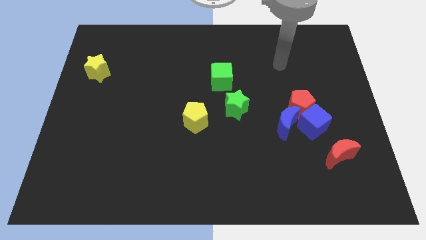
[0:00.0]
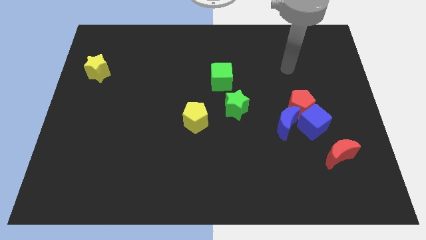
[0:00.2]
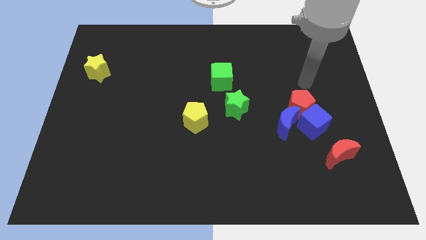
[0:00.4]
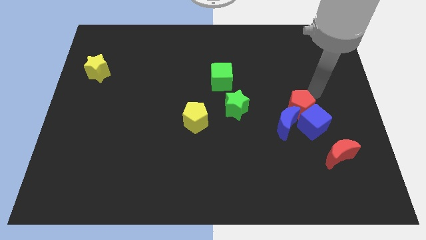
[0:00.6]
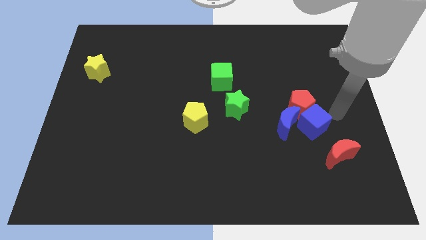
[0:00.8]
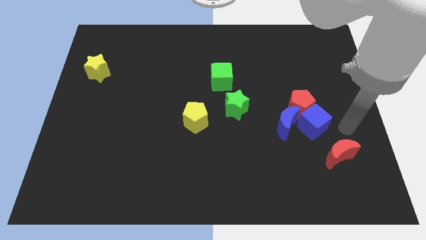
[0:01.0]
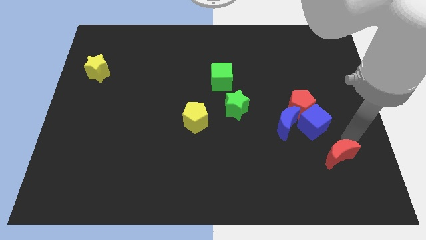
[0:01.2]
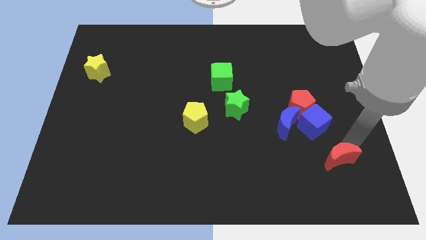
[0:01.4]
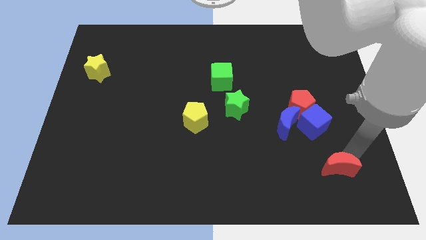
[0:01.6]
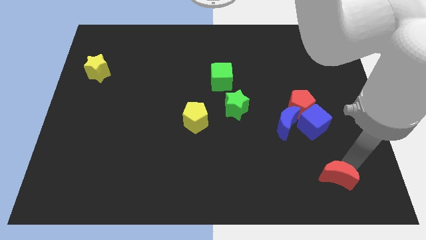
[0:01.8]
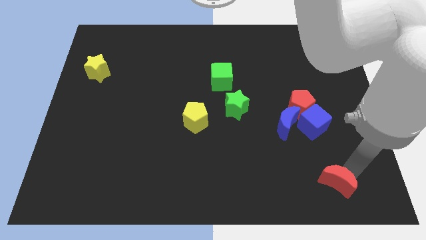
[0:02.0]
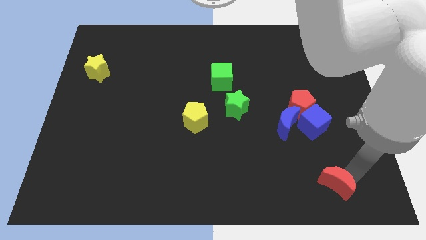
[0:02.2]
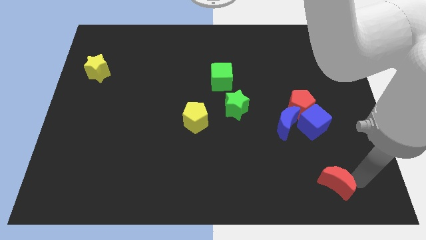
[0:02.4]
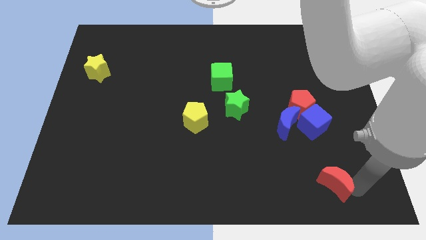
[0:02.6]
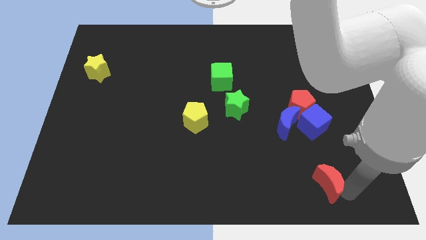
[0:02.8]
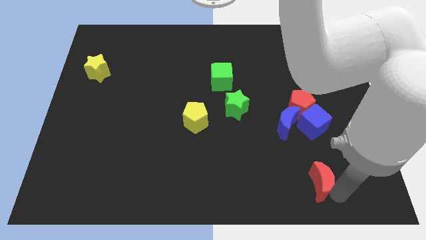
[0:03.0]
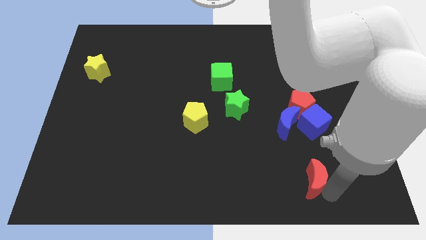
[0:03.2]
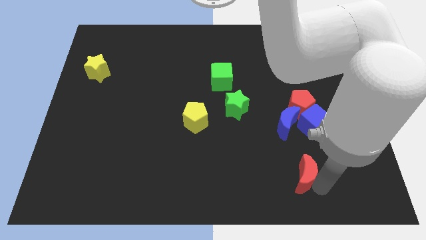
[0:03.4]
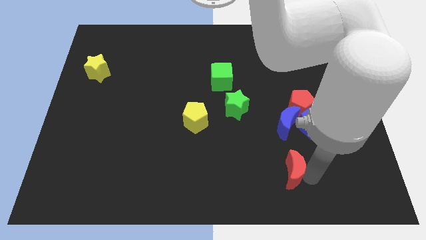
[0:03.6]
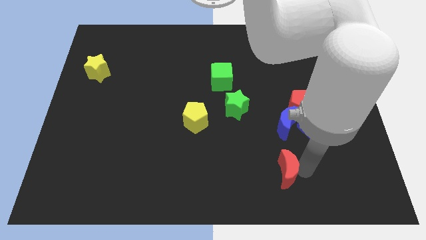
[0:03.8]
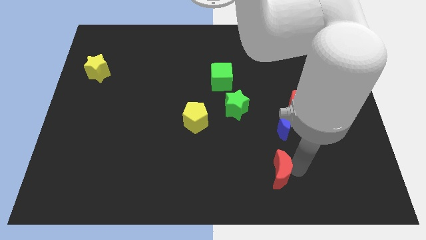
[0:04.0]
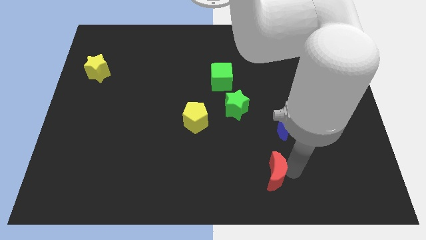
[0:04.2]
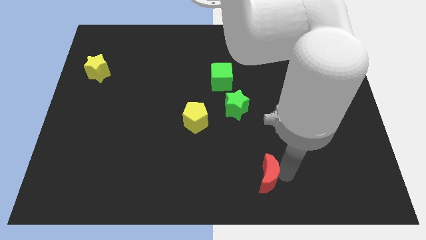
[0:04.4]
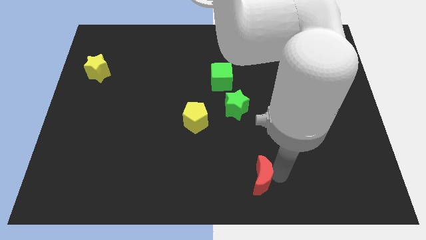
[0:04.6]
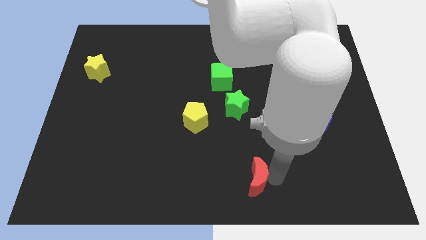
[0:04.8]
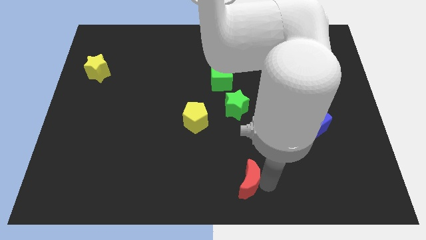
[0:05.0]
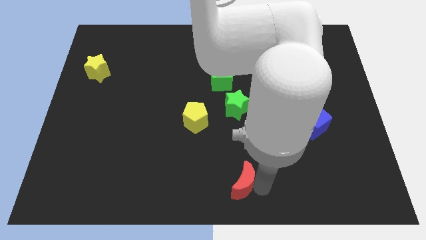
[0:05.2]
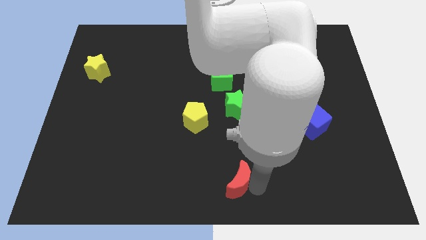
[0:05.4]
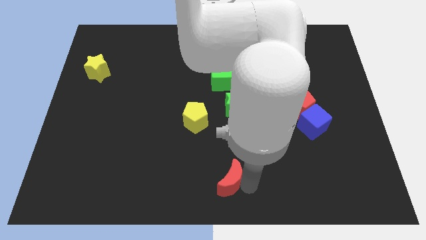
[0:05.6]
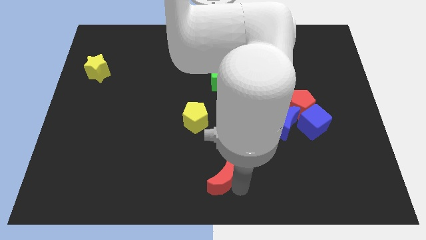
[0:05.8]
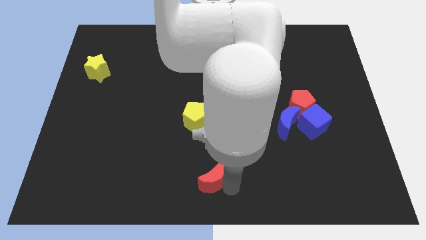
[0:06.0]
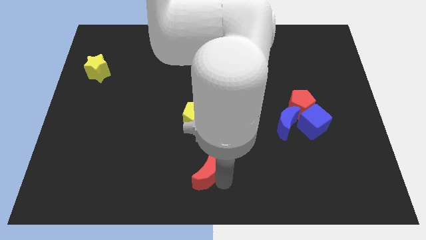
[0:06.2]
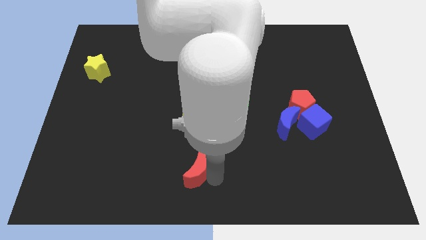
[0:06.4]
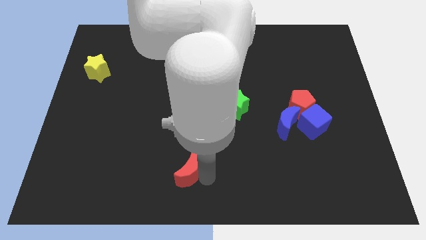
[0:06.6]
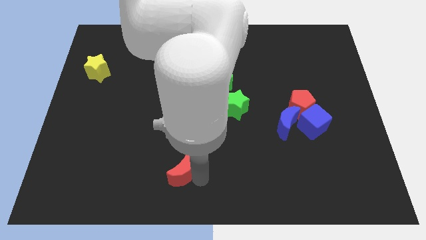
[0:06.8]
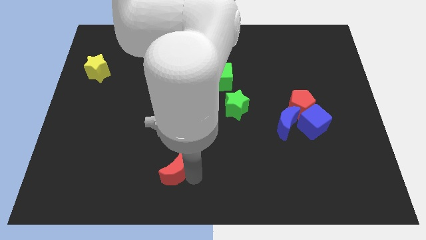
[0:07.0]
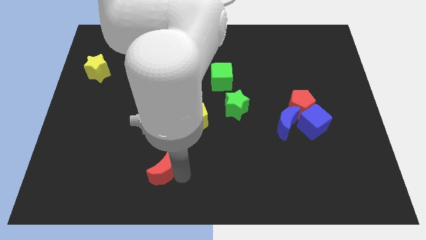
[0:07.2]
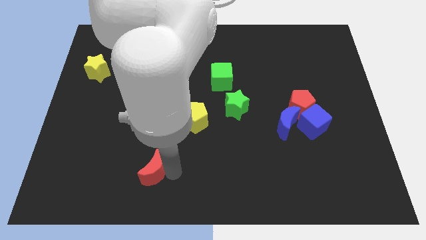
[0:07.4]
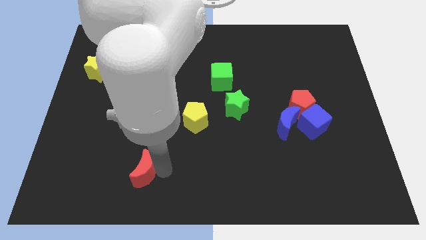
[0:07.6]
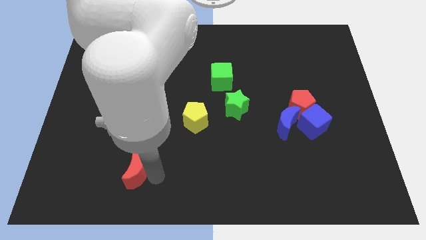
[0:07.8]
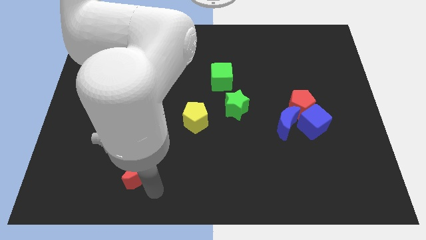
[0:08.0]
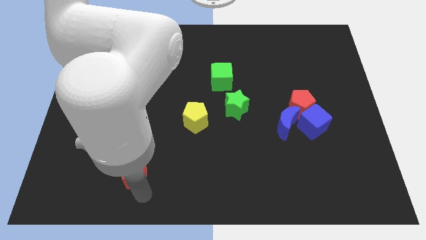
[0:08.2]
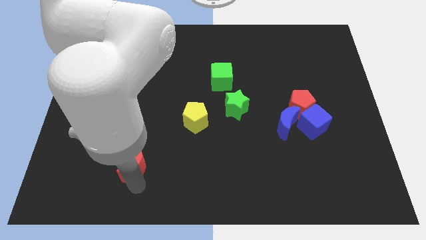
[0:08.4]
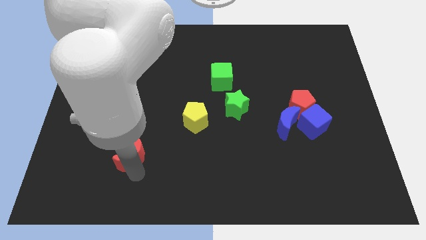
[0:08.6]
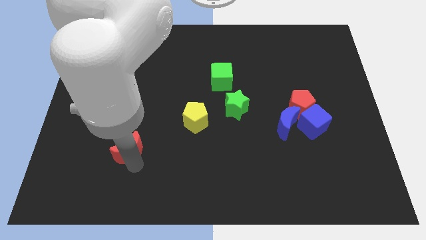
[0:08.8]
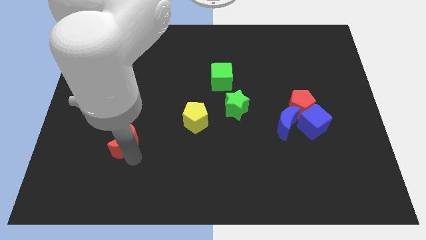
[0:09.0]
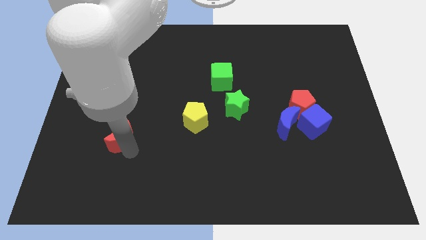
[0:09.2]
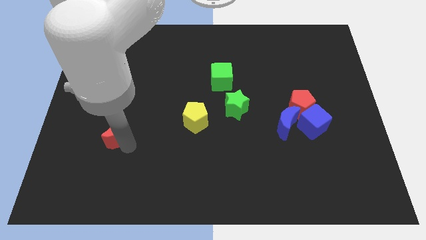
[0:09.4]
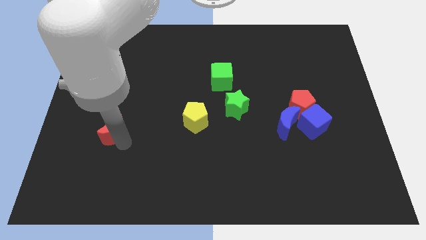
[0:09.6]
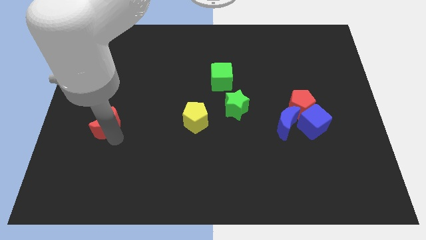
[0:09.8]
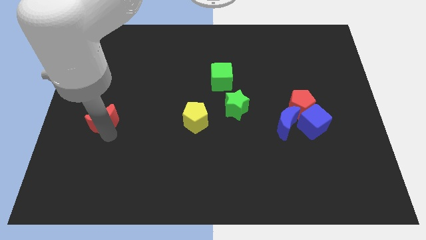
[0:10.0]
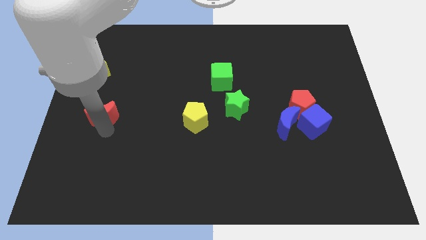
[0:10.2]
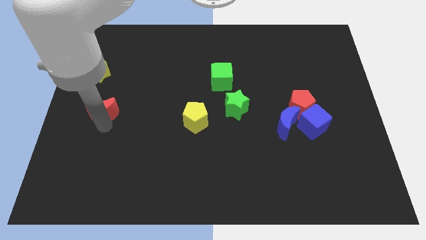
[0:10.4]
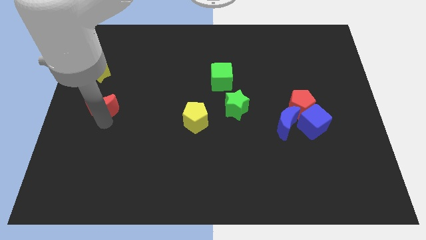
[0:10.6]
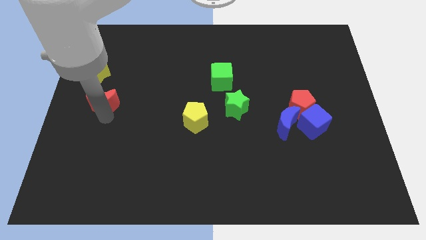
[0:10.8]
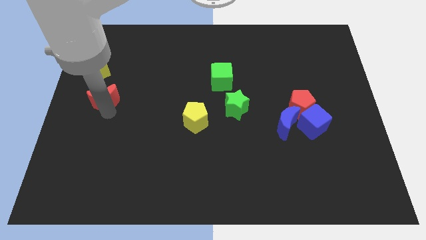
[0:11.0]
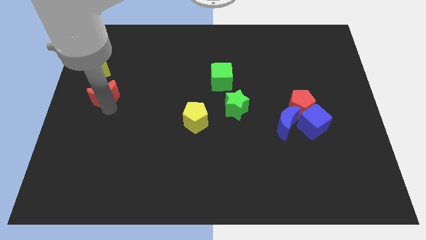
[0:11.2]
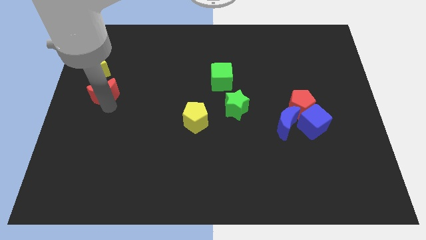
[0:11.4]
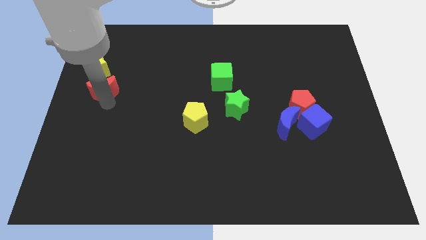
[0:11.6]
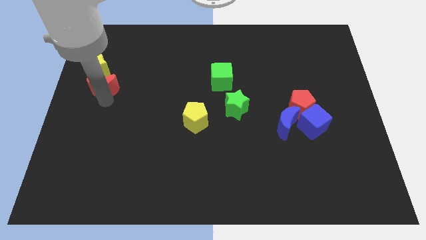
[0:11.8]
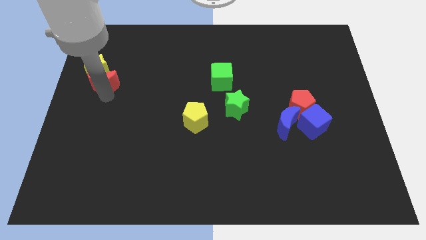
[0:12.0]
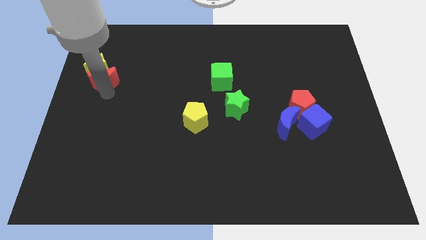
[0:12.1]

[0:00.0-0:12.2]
put the red moon close to the yellow star

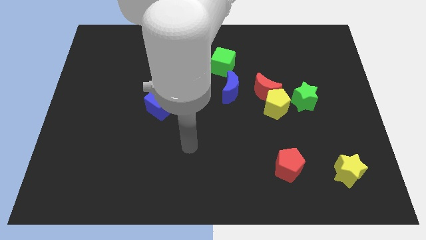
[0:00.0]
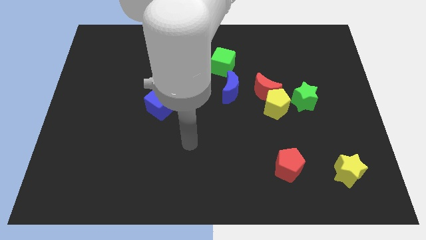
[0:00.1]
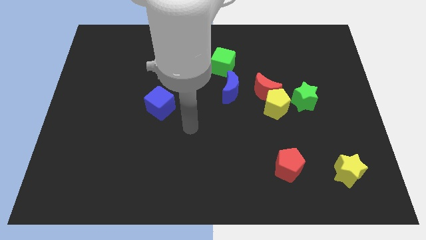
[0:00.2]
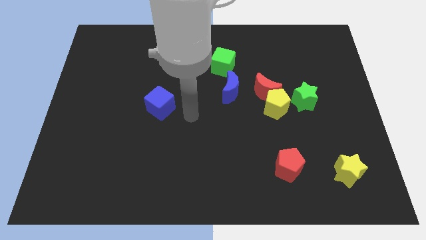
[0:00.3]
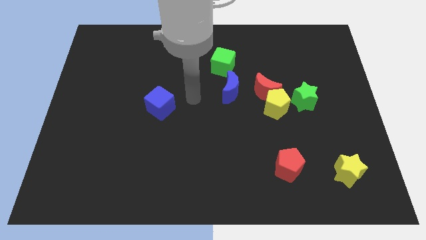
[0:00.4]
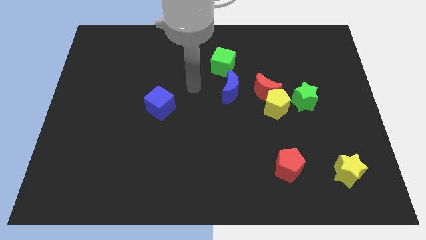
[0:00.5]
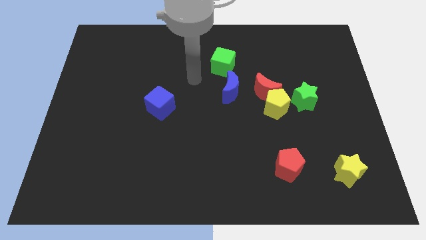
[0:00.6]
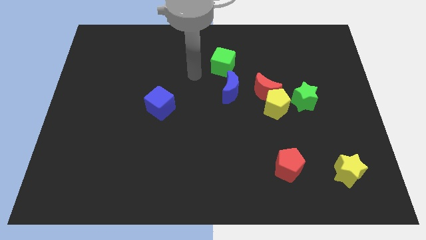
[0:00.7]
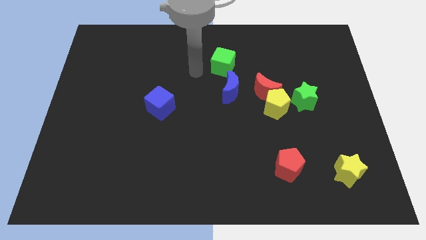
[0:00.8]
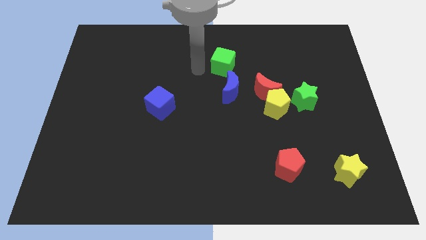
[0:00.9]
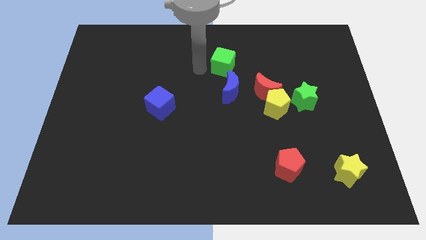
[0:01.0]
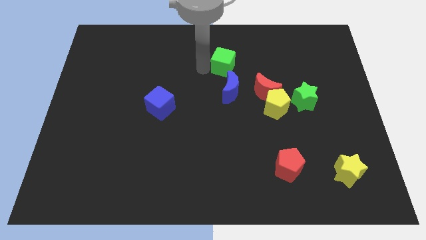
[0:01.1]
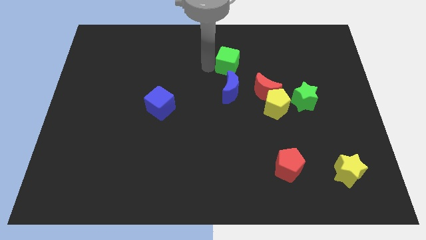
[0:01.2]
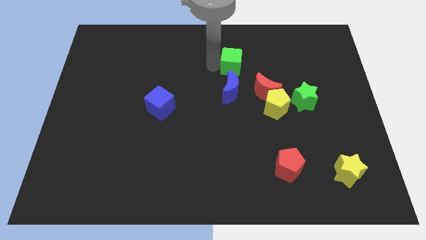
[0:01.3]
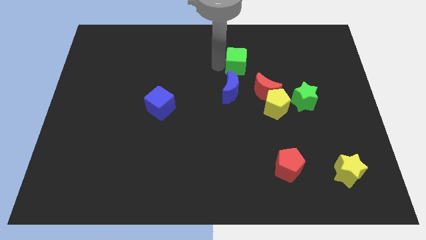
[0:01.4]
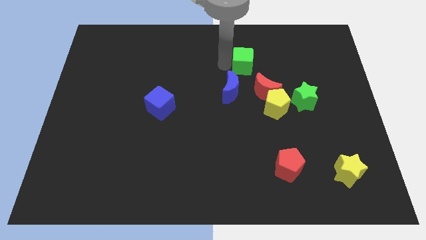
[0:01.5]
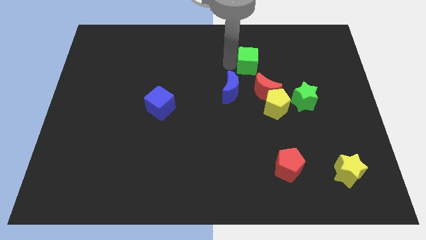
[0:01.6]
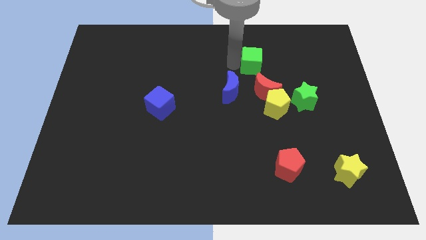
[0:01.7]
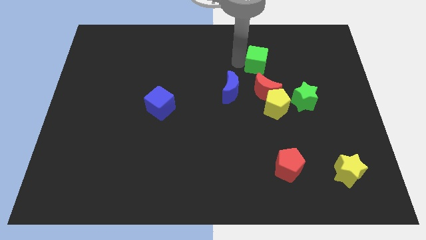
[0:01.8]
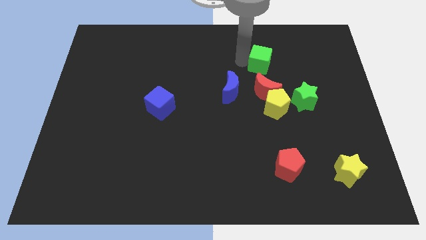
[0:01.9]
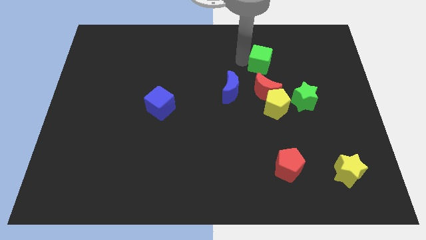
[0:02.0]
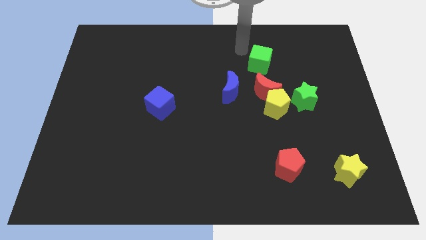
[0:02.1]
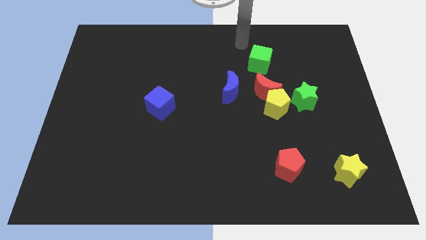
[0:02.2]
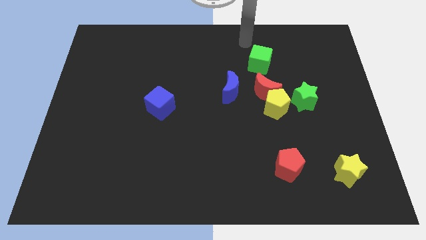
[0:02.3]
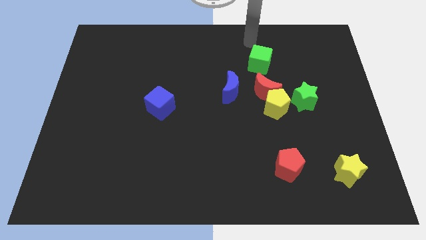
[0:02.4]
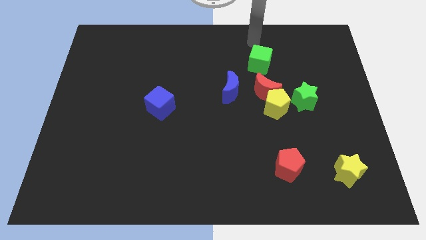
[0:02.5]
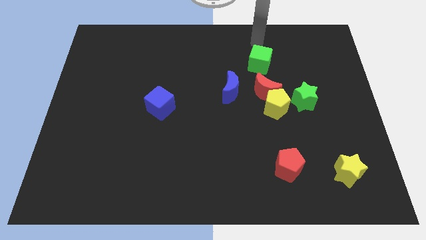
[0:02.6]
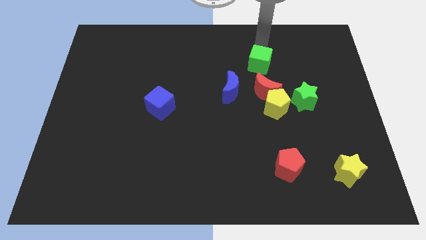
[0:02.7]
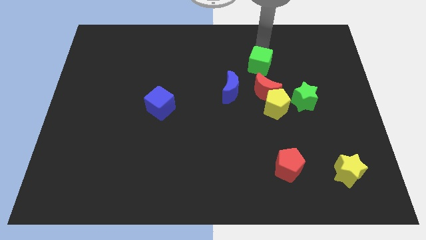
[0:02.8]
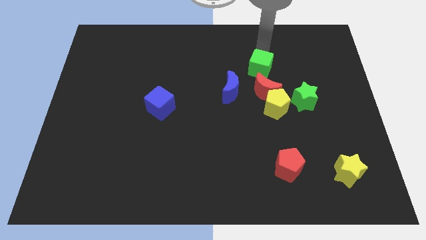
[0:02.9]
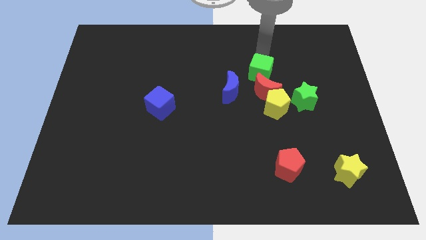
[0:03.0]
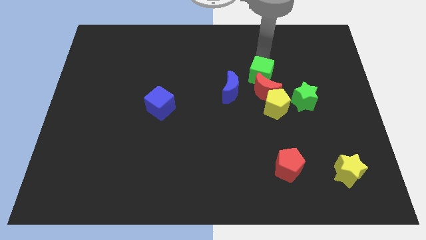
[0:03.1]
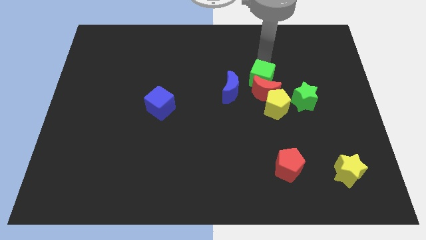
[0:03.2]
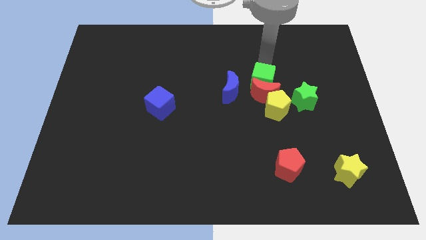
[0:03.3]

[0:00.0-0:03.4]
push the green cube close to the red moon
